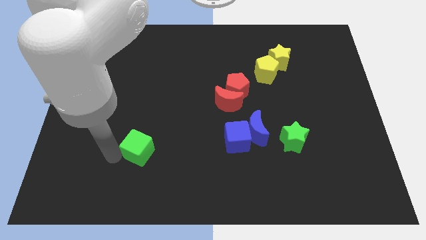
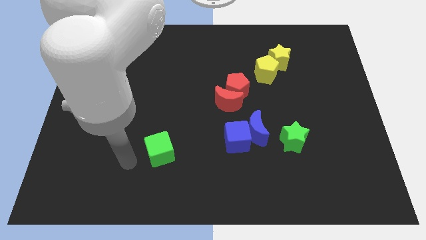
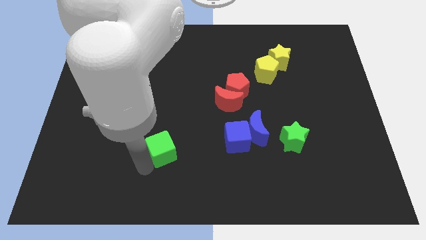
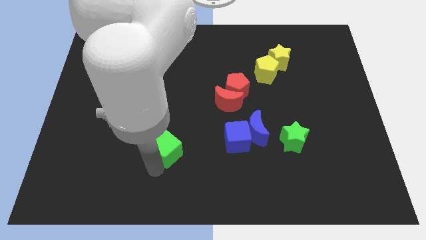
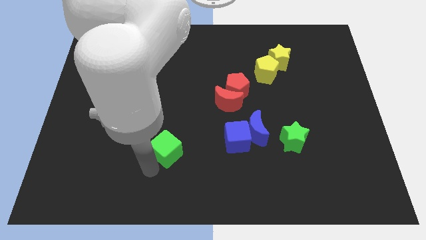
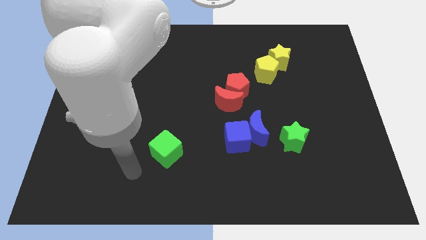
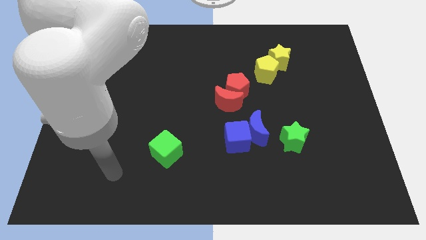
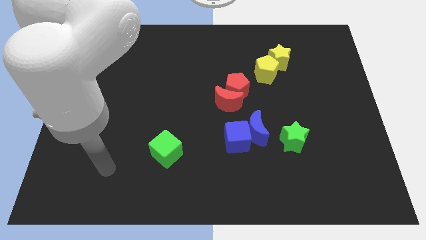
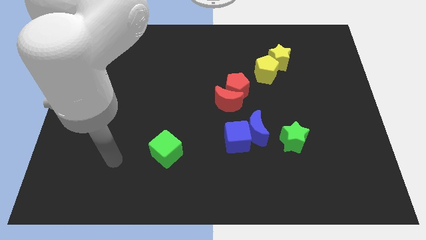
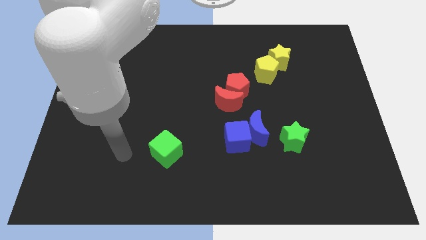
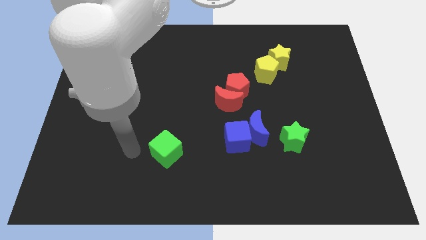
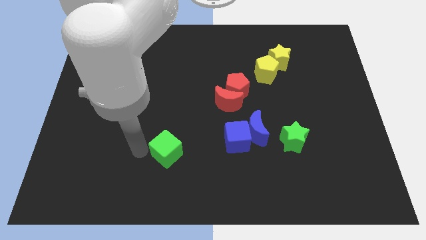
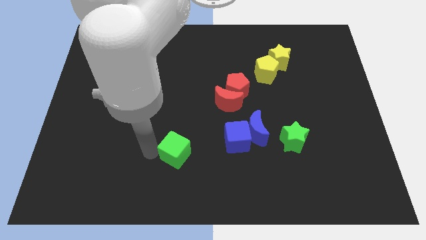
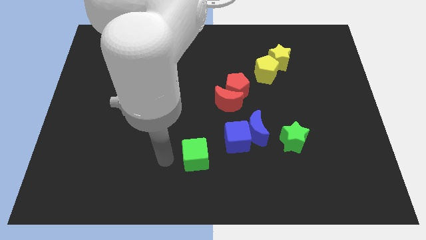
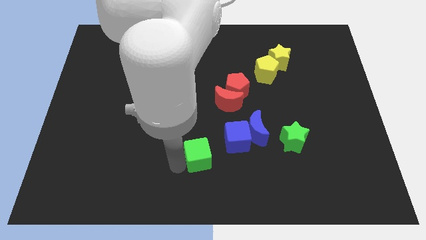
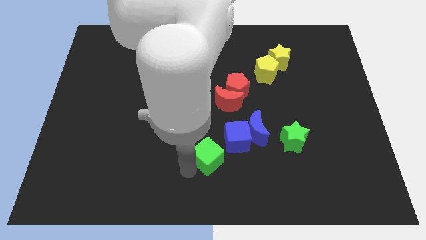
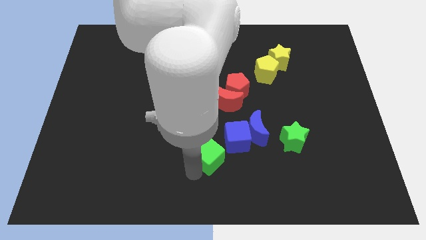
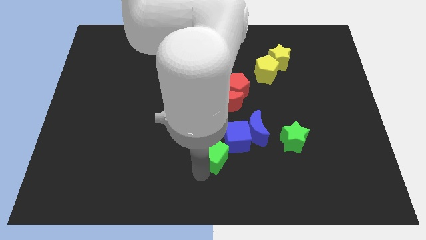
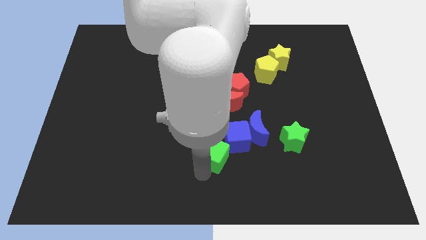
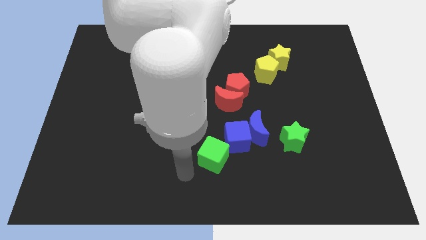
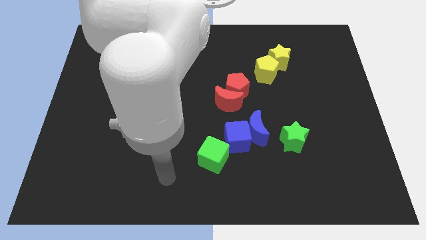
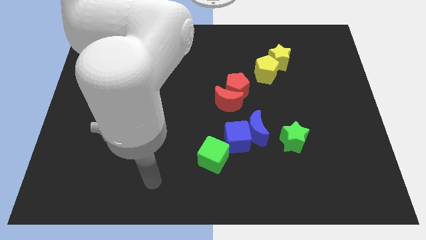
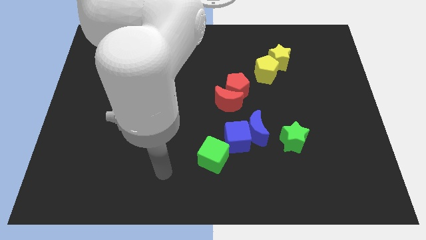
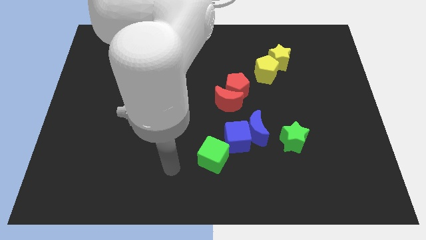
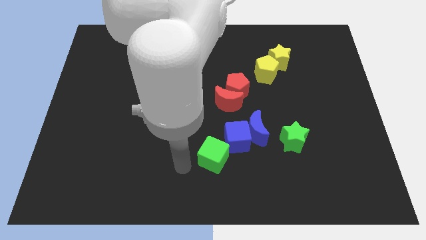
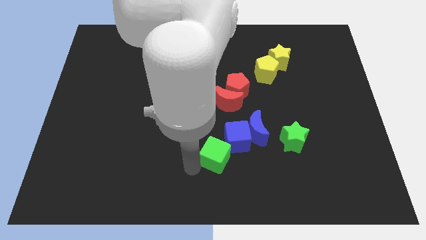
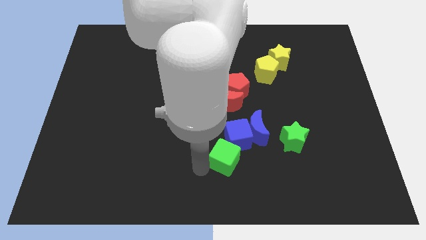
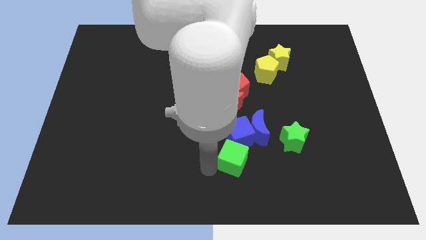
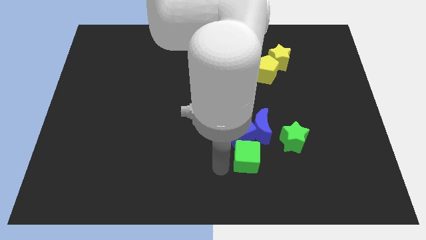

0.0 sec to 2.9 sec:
push the green cube to the bottom of the blue cube

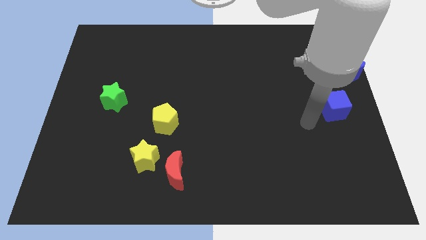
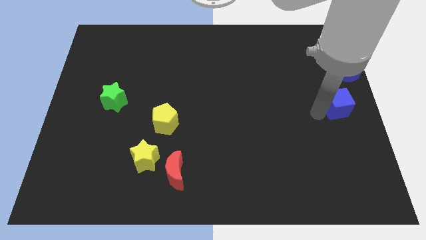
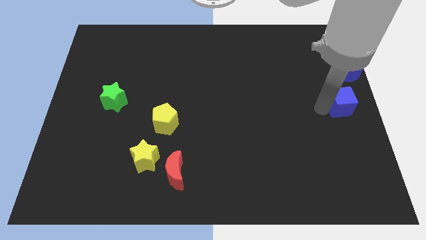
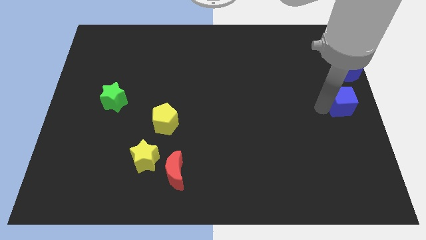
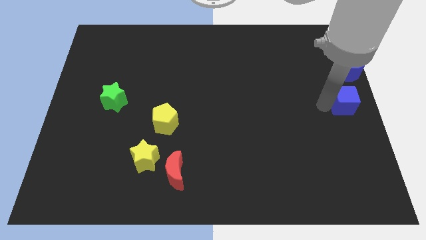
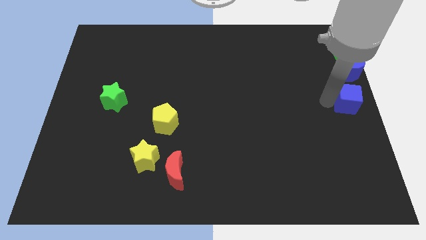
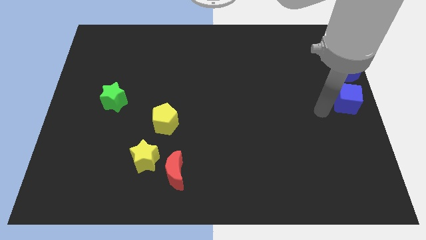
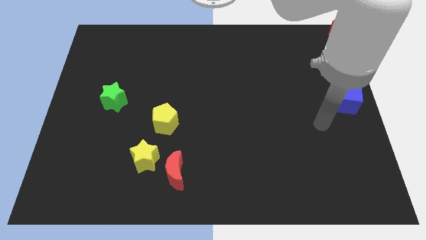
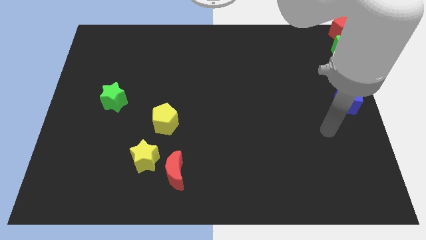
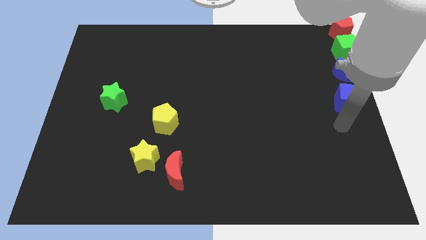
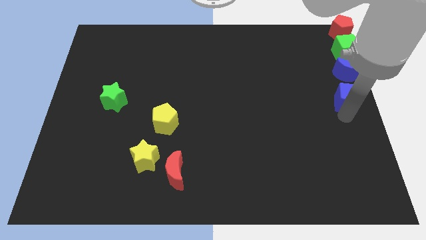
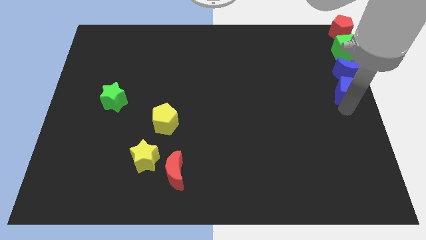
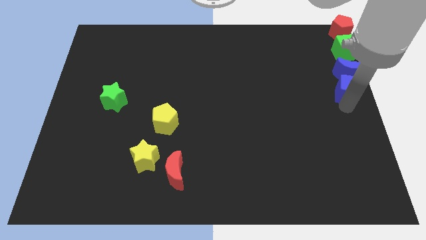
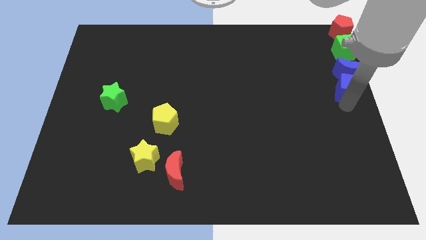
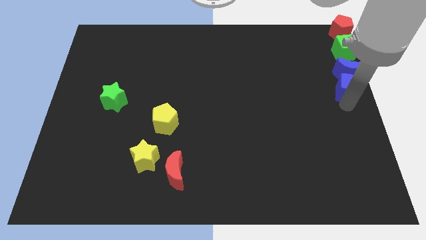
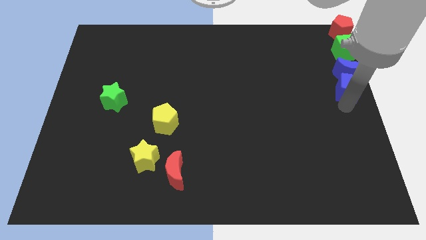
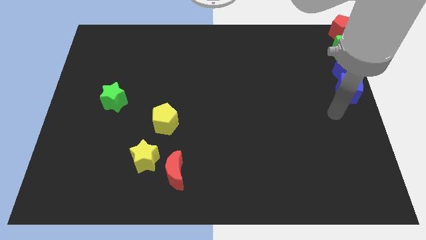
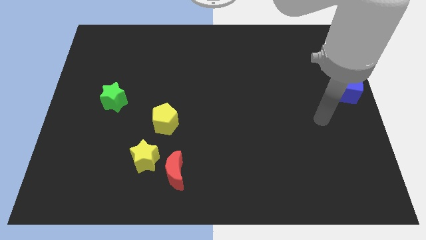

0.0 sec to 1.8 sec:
slide the blue cube to the bottom side of the blue crescent

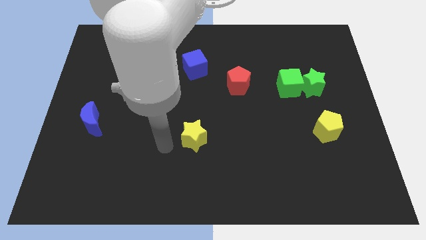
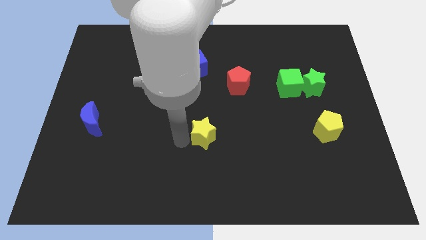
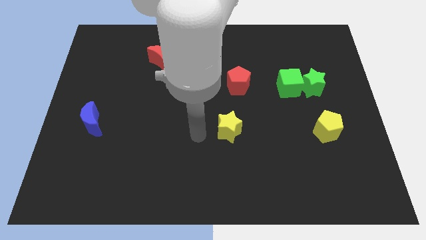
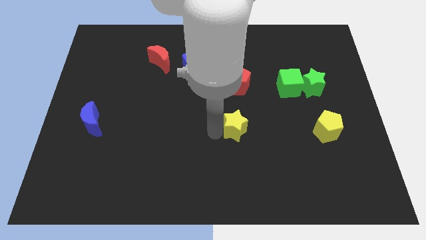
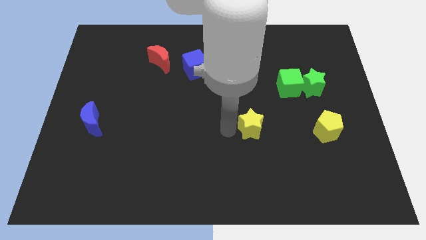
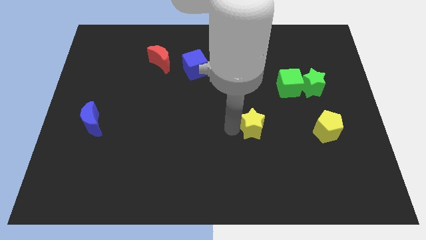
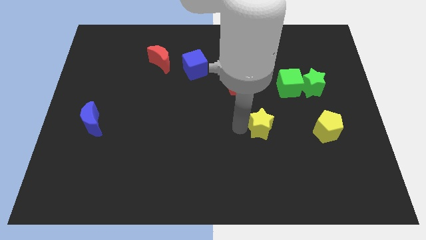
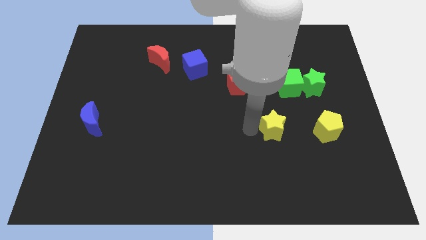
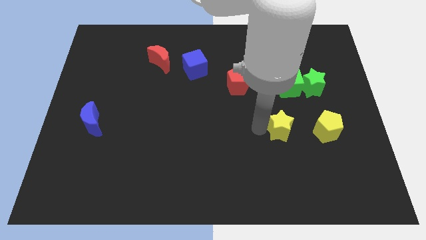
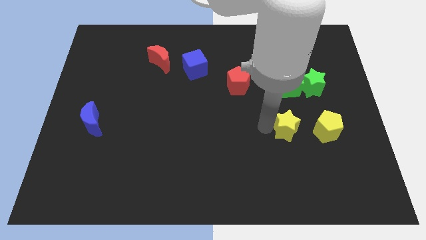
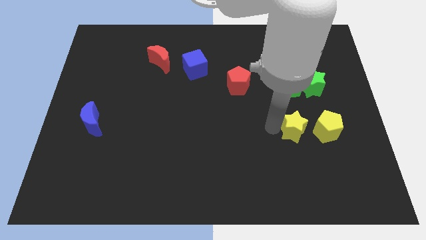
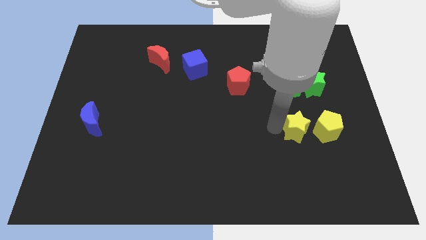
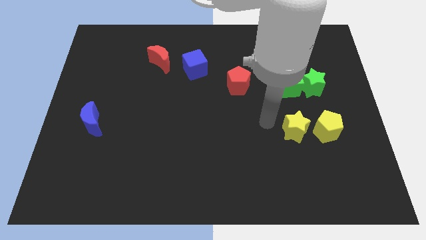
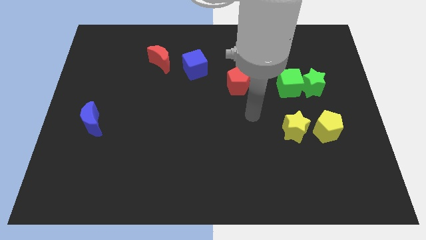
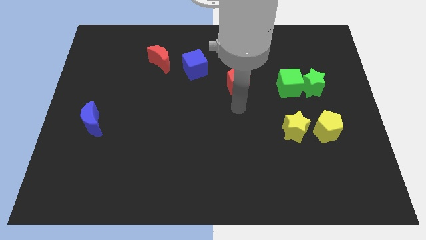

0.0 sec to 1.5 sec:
move the yellow star to the left side of the yellow pentagon

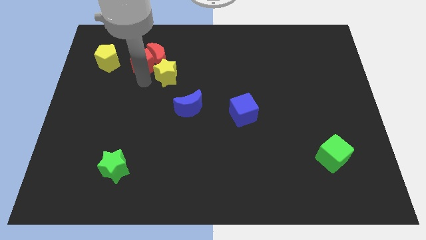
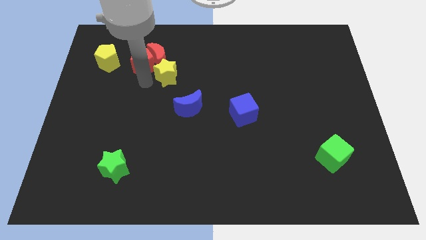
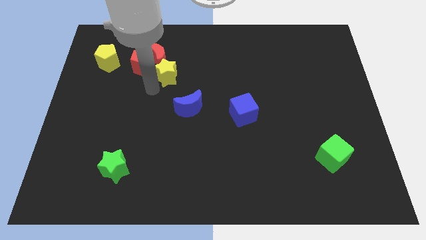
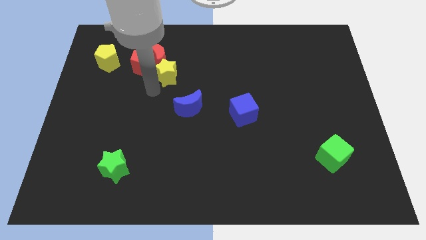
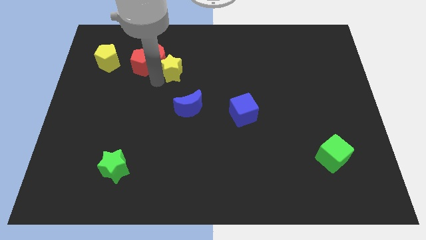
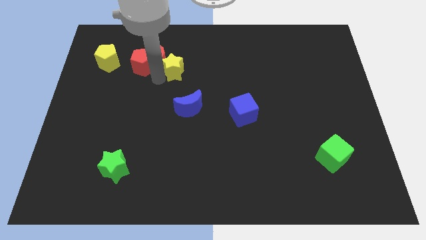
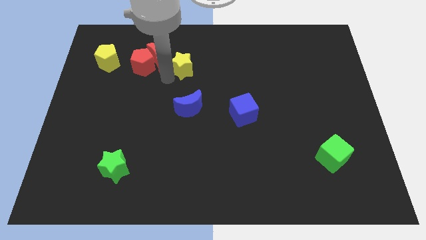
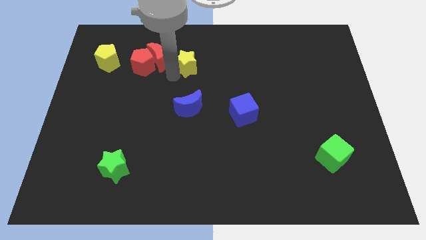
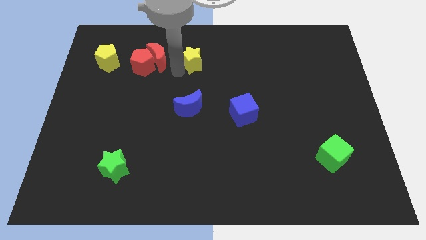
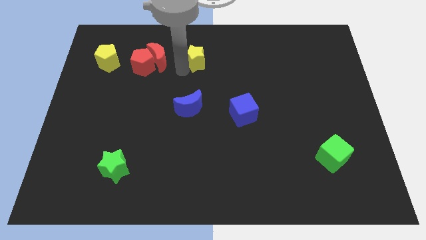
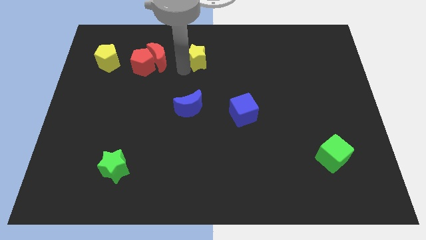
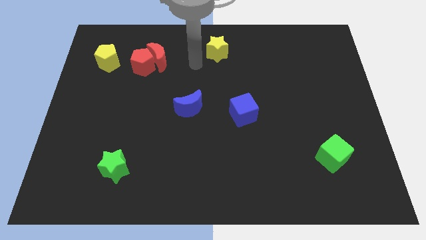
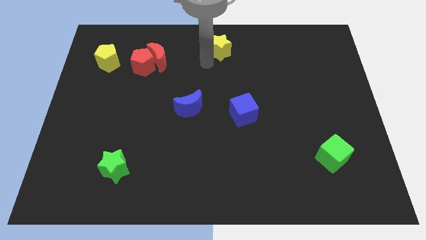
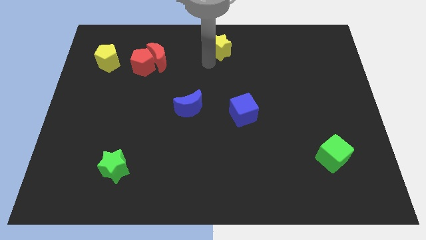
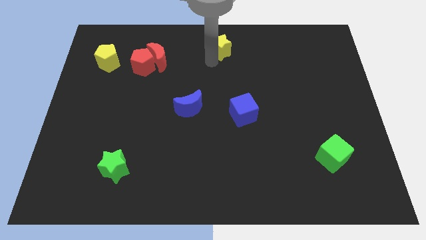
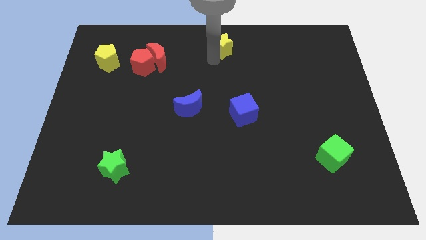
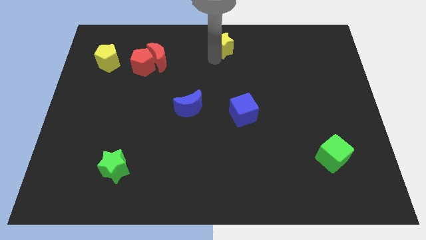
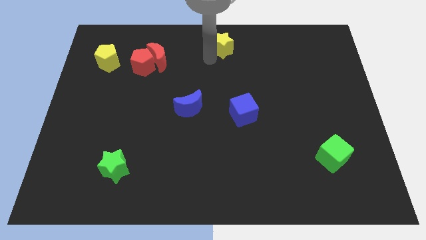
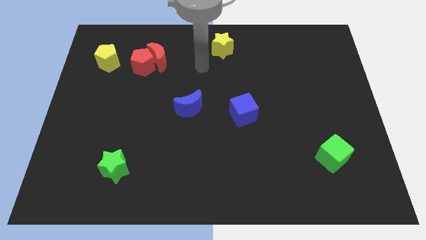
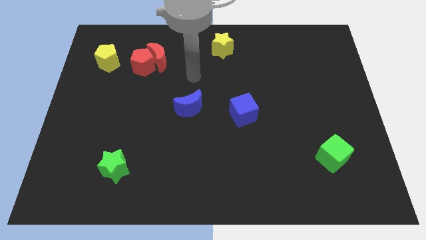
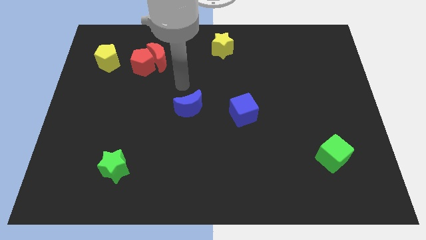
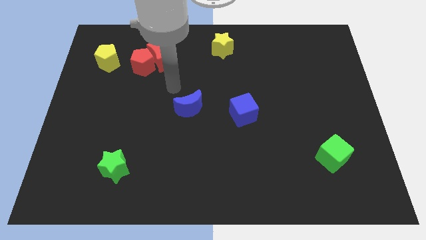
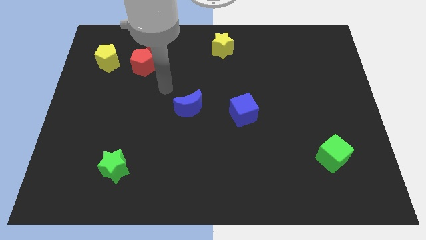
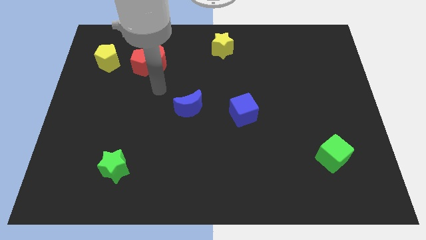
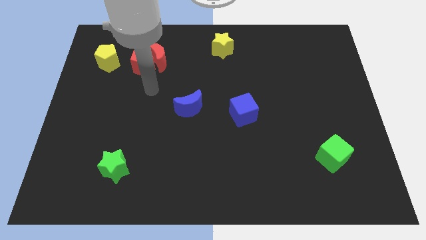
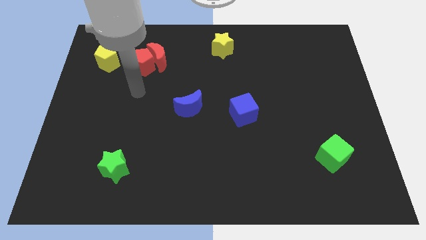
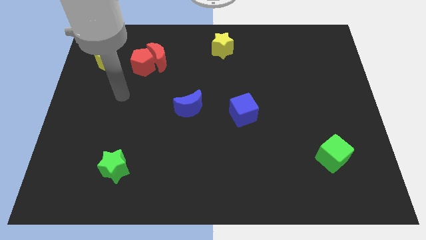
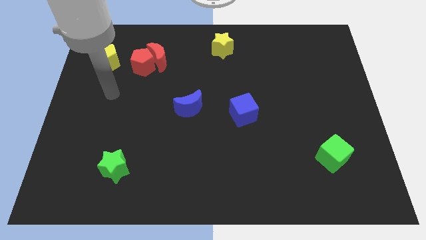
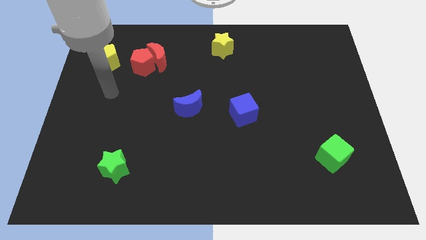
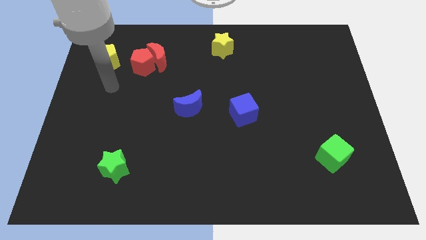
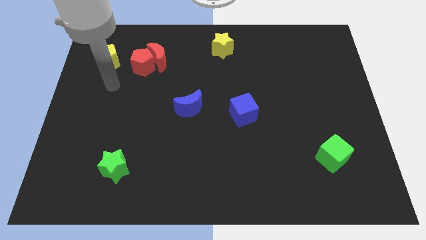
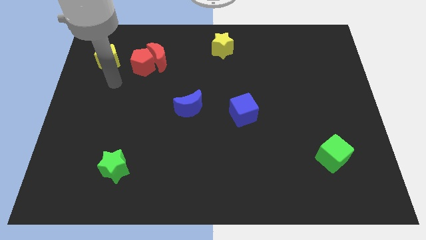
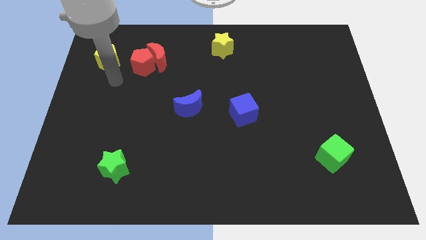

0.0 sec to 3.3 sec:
move the yellow star to the top center
